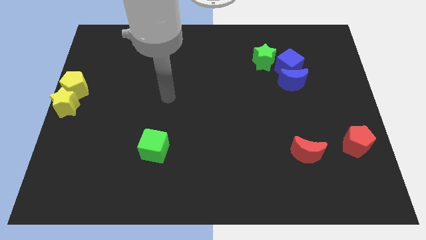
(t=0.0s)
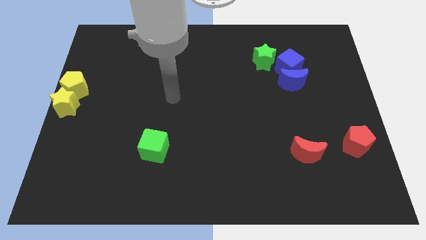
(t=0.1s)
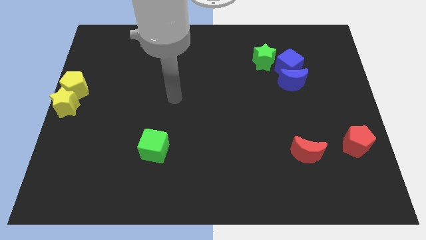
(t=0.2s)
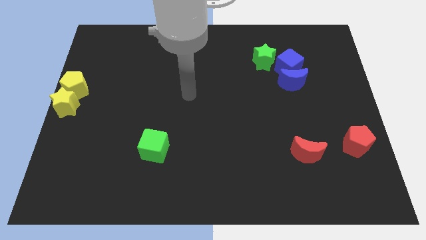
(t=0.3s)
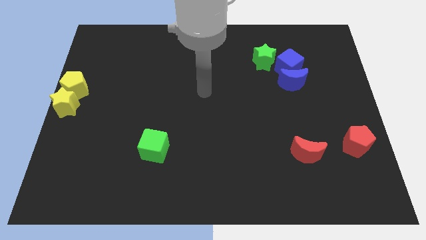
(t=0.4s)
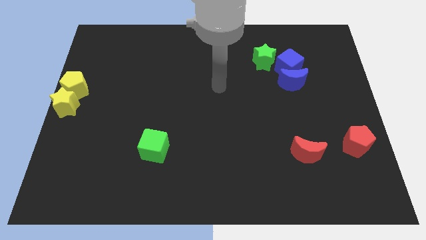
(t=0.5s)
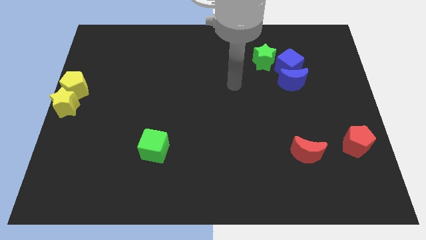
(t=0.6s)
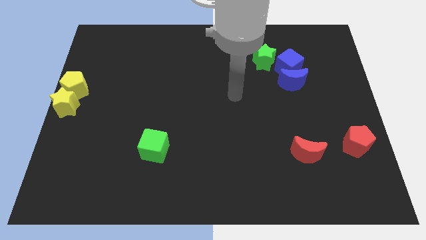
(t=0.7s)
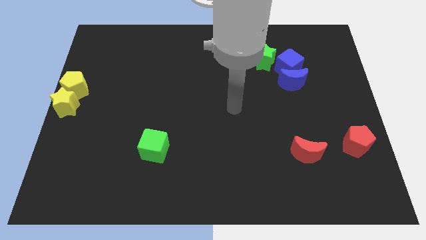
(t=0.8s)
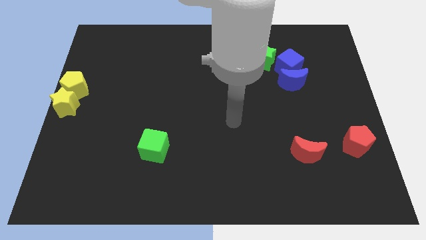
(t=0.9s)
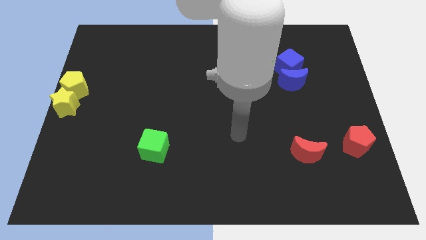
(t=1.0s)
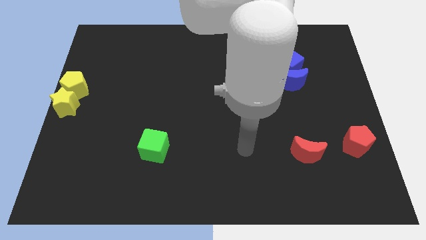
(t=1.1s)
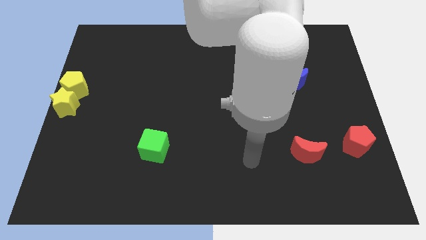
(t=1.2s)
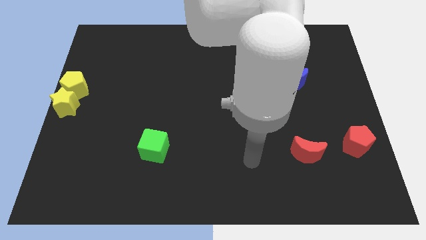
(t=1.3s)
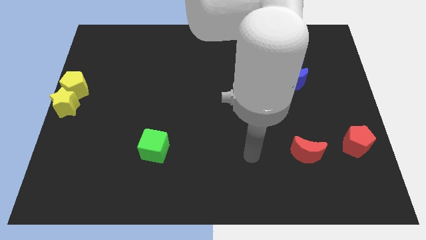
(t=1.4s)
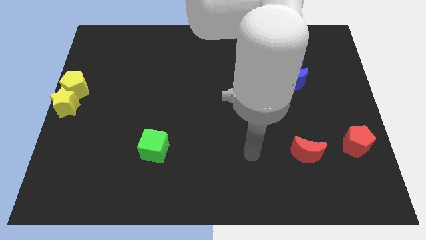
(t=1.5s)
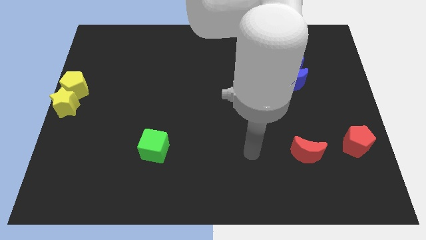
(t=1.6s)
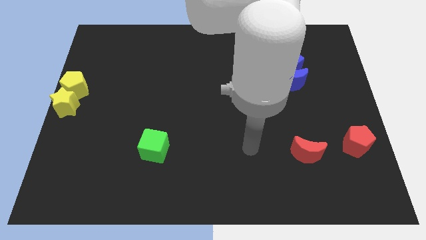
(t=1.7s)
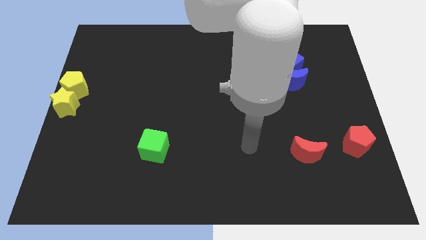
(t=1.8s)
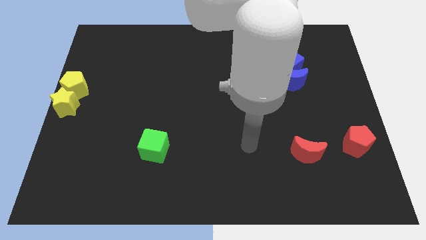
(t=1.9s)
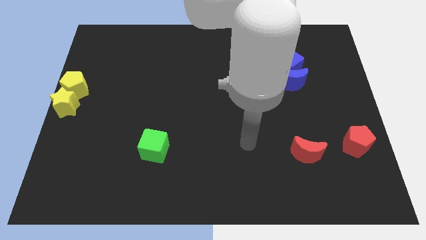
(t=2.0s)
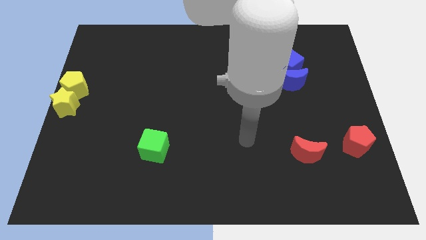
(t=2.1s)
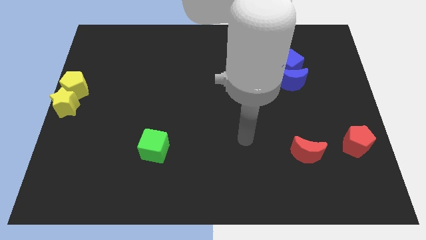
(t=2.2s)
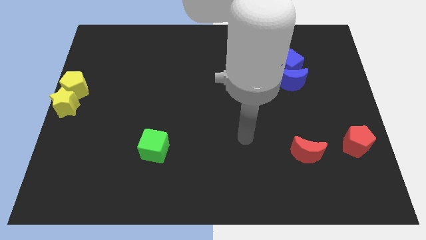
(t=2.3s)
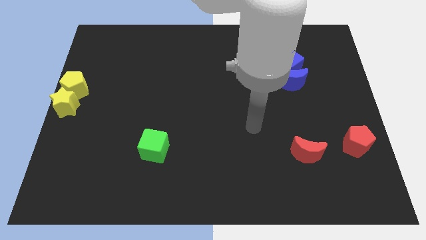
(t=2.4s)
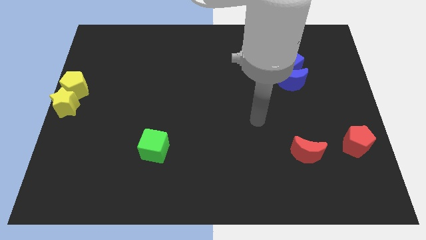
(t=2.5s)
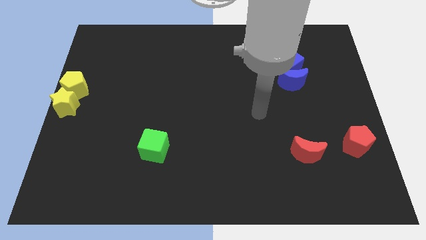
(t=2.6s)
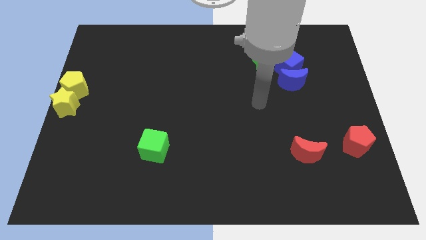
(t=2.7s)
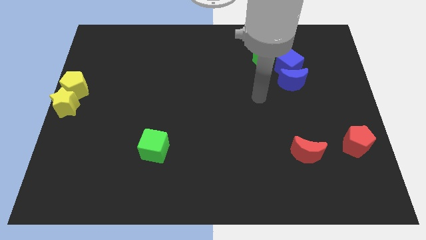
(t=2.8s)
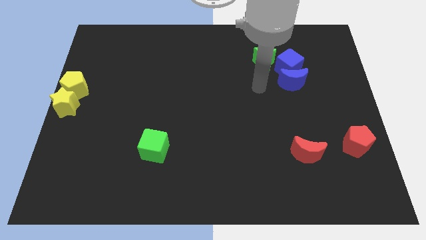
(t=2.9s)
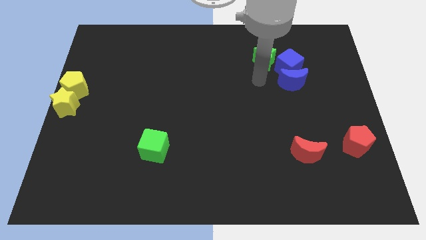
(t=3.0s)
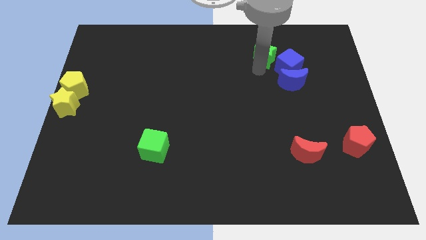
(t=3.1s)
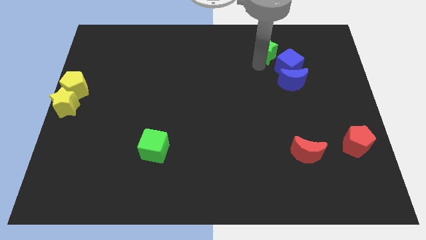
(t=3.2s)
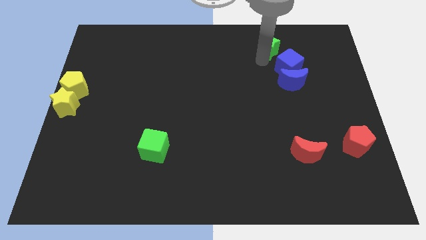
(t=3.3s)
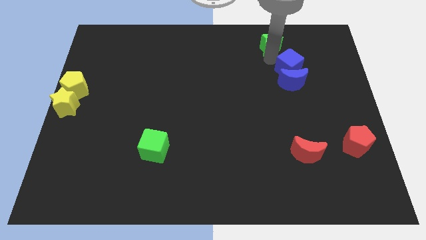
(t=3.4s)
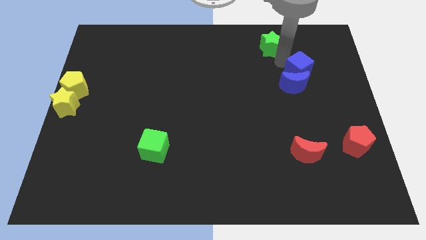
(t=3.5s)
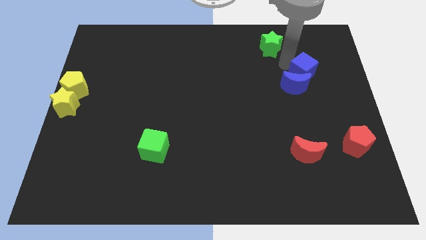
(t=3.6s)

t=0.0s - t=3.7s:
move the green star to the top of the board

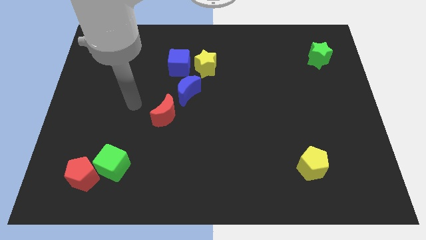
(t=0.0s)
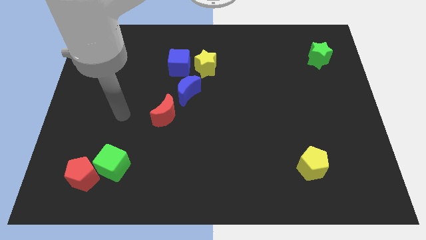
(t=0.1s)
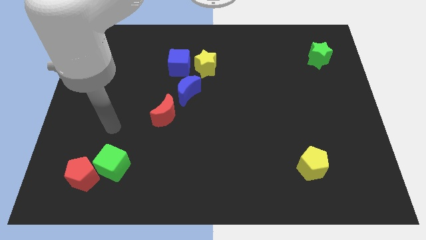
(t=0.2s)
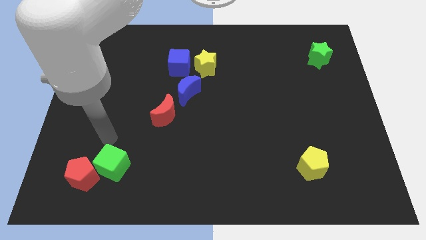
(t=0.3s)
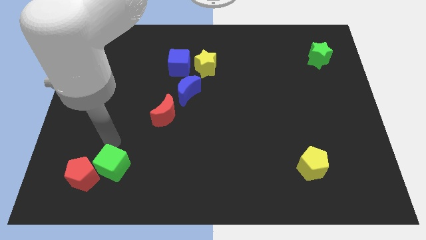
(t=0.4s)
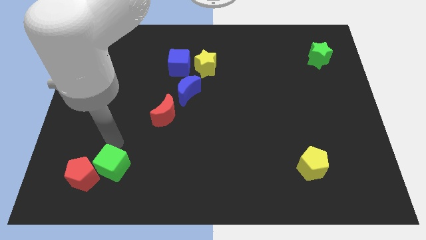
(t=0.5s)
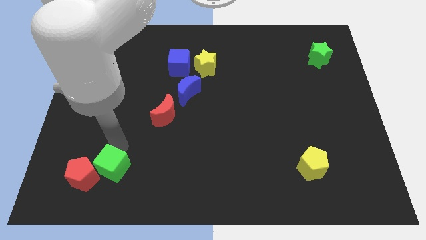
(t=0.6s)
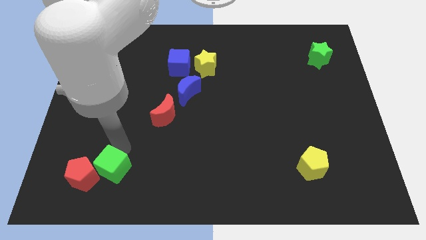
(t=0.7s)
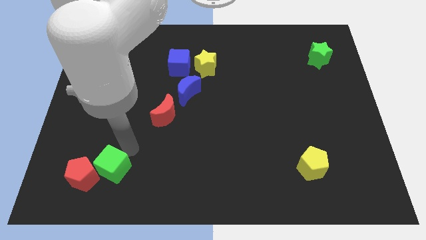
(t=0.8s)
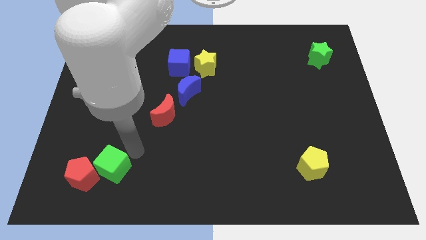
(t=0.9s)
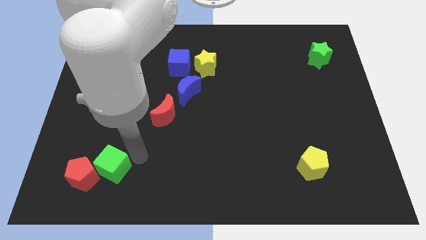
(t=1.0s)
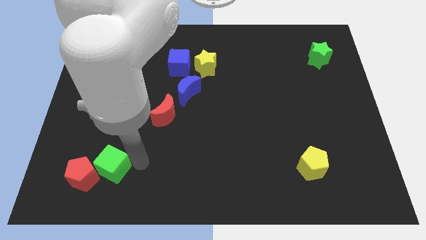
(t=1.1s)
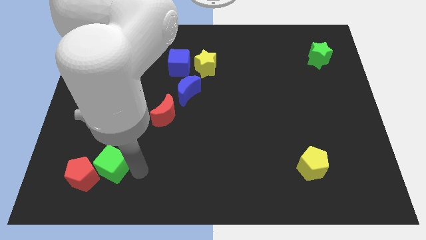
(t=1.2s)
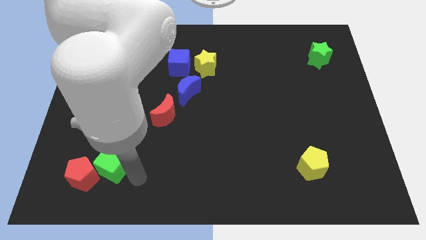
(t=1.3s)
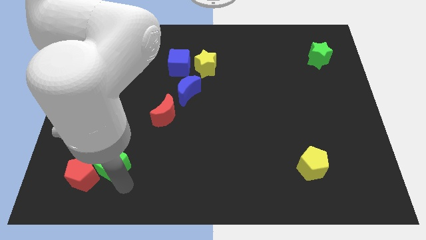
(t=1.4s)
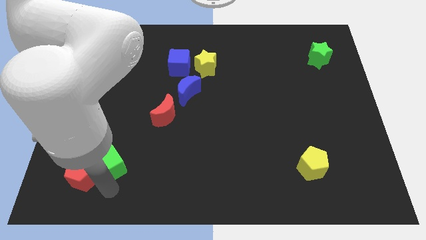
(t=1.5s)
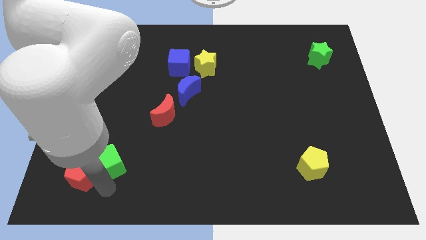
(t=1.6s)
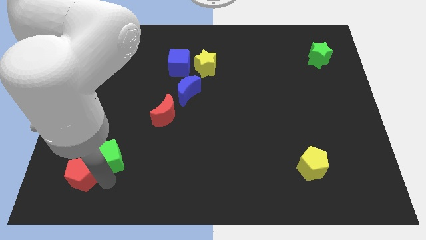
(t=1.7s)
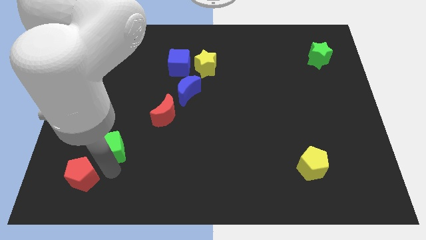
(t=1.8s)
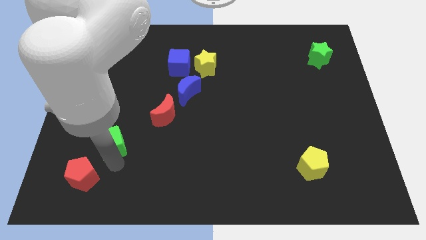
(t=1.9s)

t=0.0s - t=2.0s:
push the green cube towards the top of the board

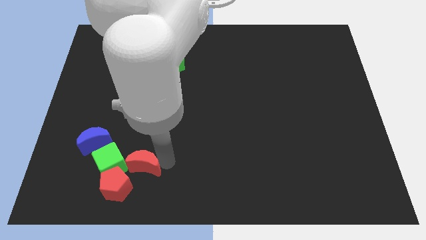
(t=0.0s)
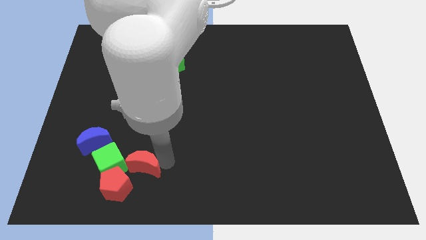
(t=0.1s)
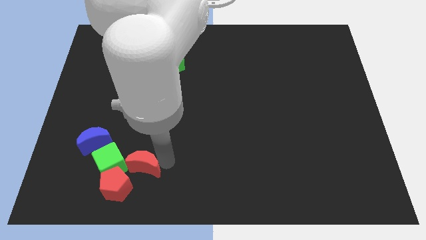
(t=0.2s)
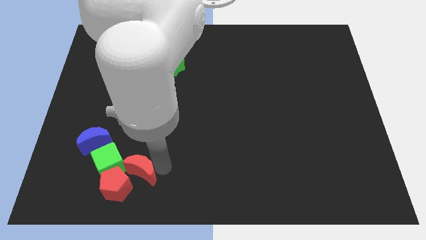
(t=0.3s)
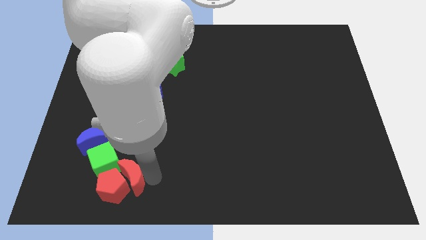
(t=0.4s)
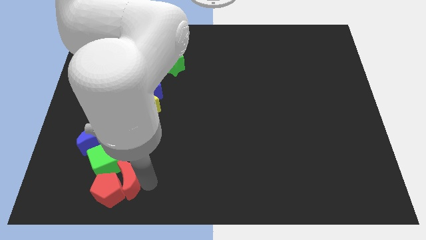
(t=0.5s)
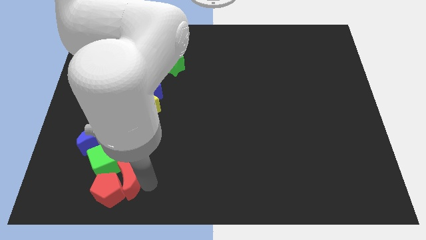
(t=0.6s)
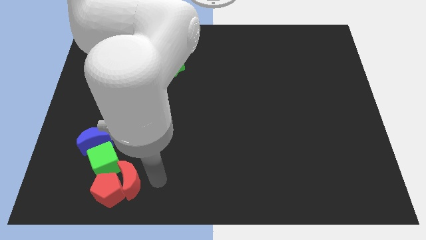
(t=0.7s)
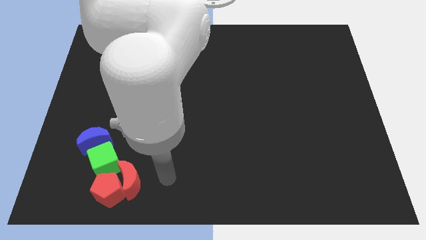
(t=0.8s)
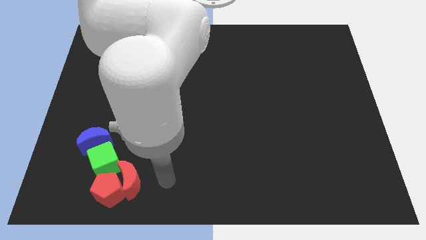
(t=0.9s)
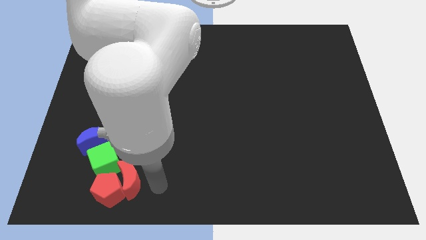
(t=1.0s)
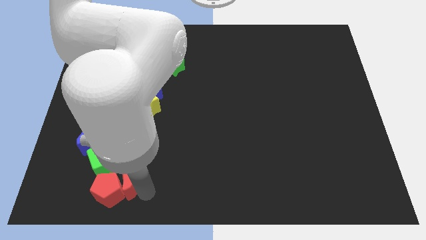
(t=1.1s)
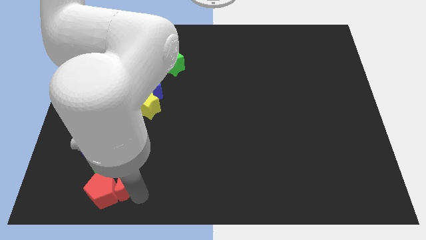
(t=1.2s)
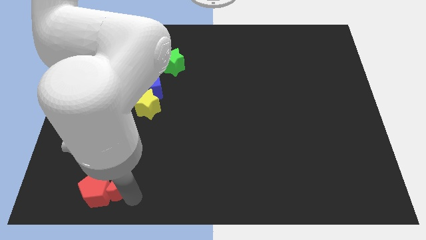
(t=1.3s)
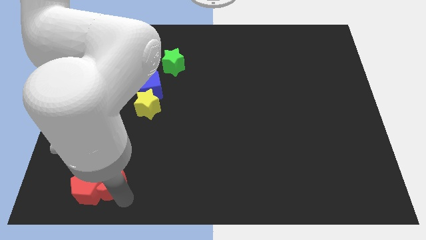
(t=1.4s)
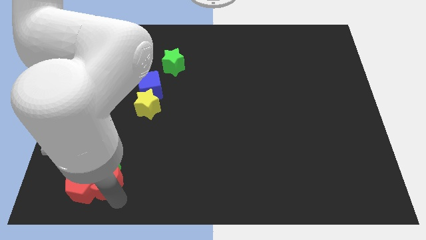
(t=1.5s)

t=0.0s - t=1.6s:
push red moon into the red pentagon

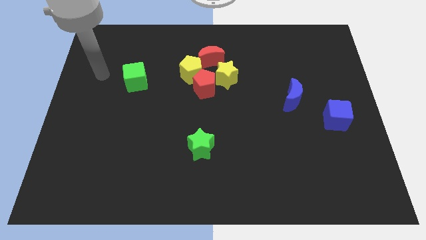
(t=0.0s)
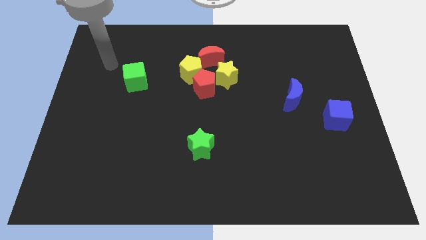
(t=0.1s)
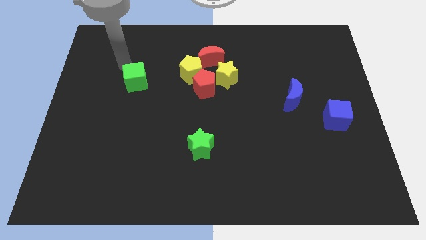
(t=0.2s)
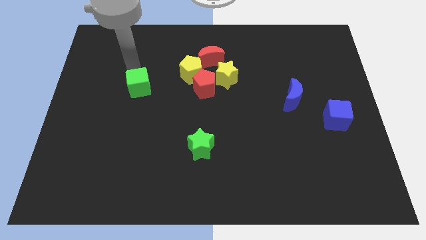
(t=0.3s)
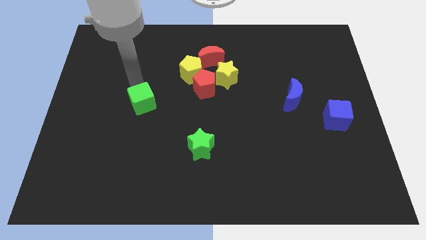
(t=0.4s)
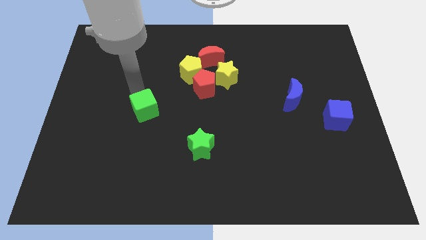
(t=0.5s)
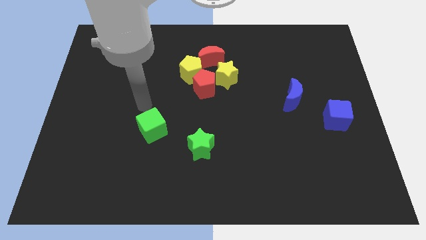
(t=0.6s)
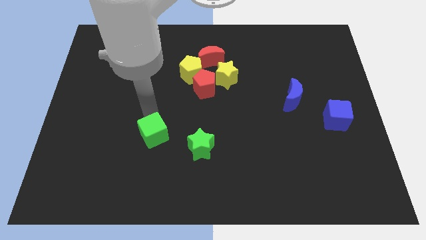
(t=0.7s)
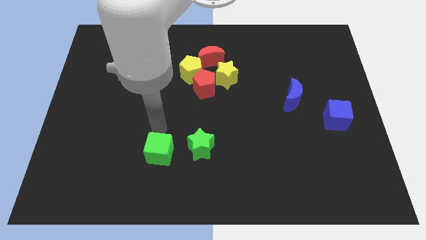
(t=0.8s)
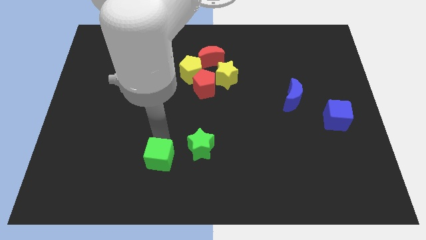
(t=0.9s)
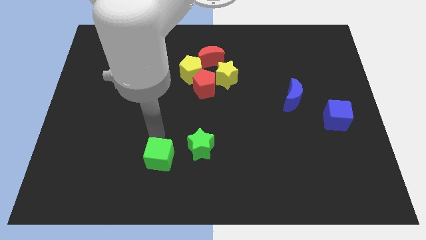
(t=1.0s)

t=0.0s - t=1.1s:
place the green cube left to the green star

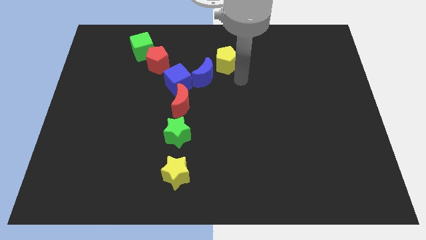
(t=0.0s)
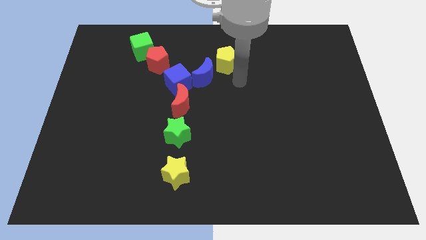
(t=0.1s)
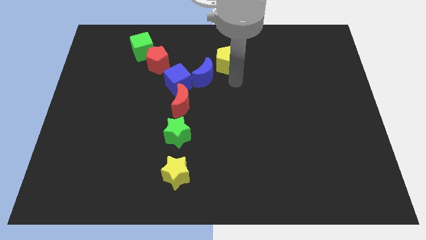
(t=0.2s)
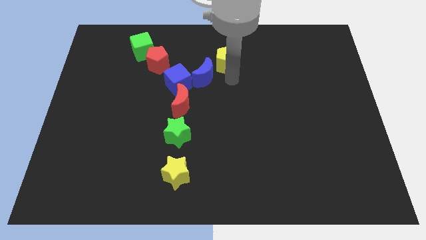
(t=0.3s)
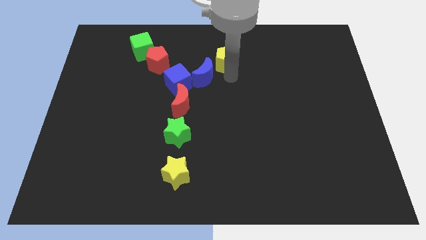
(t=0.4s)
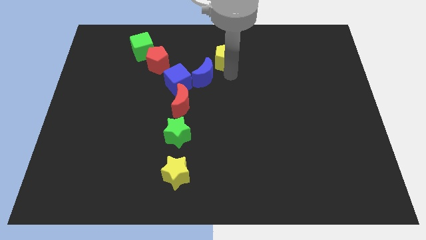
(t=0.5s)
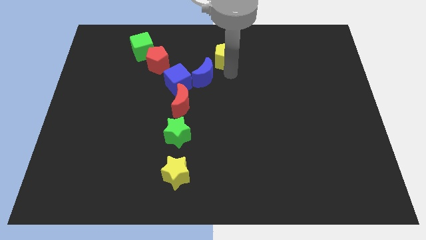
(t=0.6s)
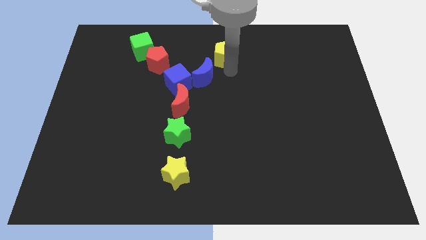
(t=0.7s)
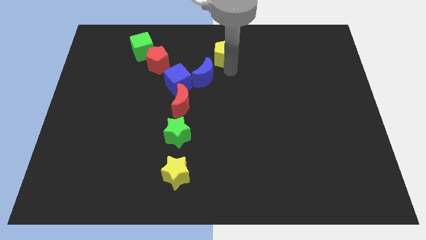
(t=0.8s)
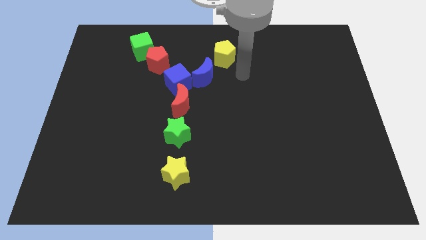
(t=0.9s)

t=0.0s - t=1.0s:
push the yellow pentagon slightly to the top center of the board
